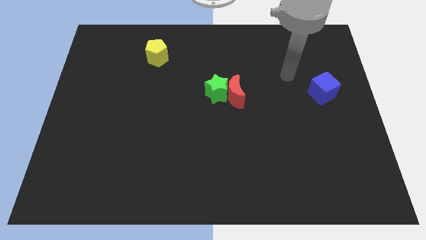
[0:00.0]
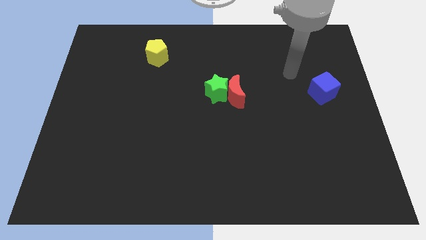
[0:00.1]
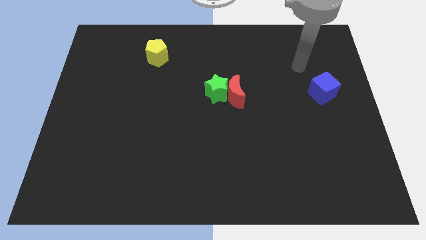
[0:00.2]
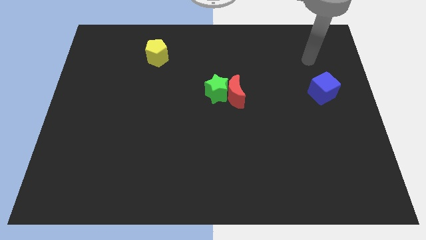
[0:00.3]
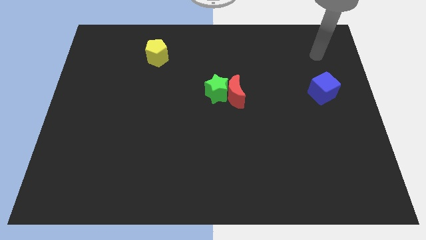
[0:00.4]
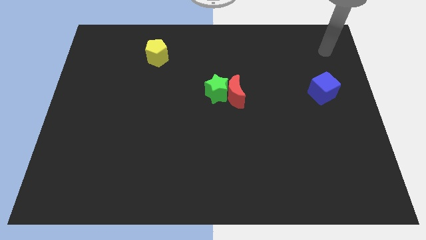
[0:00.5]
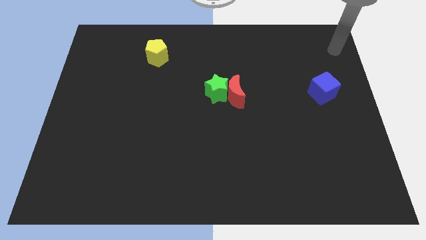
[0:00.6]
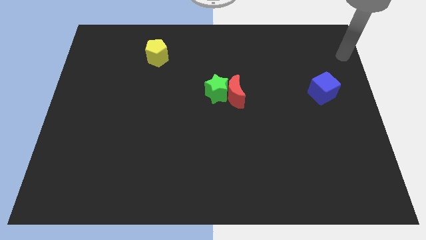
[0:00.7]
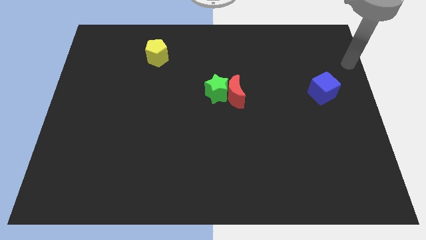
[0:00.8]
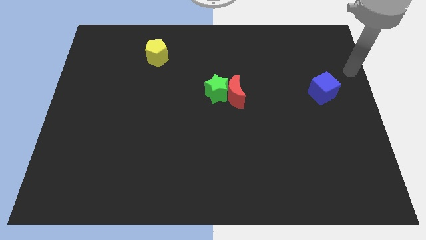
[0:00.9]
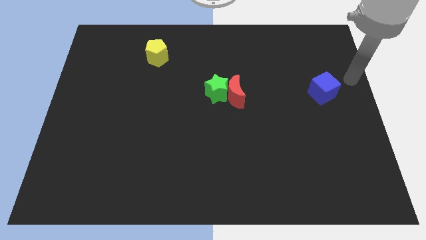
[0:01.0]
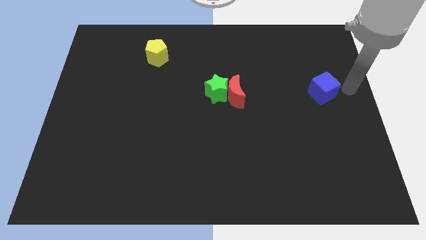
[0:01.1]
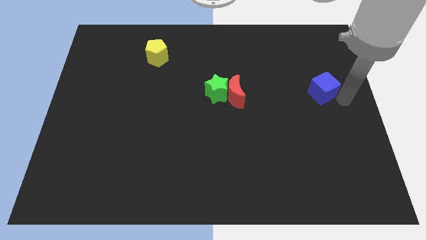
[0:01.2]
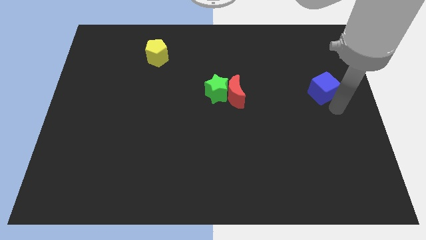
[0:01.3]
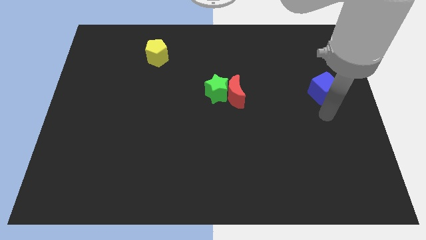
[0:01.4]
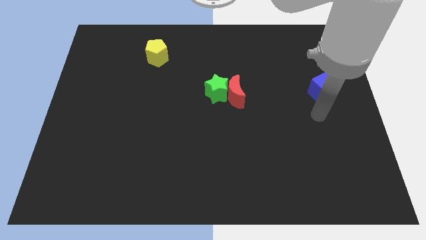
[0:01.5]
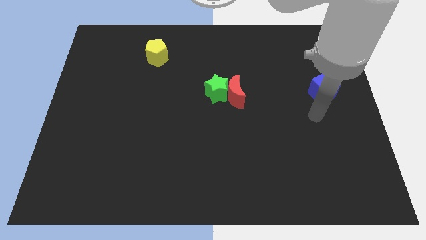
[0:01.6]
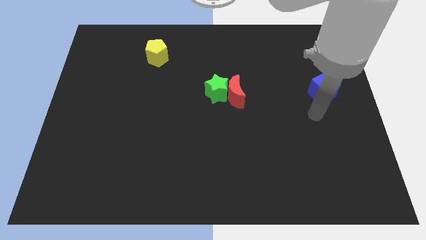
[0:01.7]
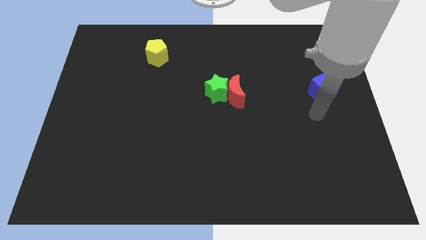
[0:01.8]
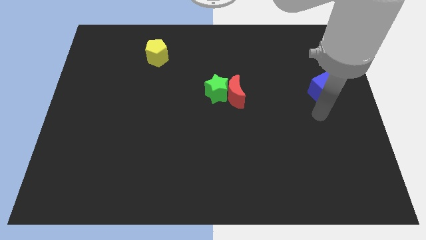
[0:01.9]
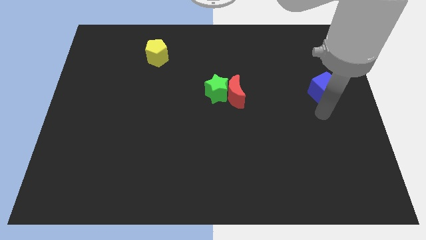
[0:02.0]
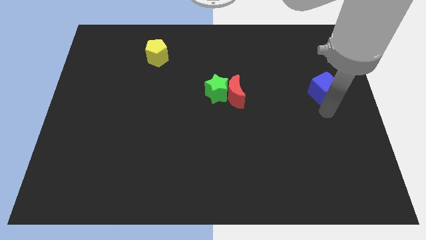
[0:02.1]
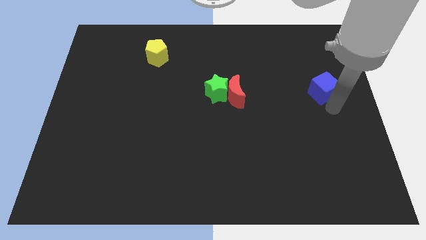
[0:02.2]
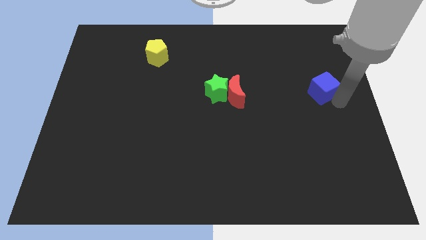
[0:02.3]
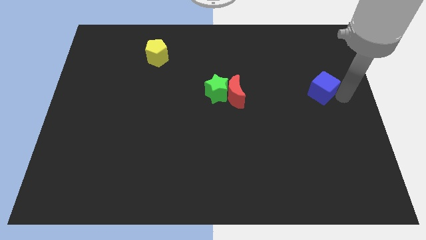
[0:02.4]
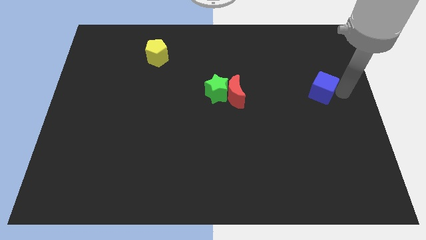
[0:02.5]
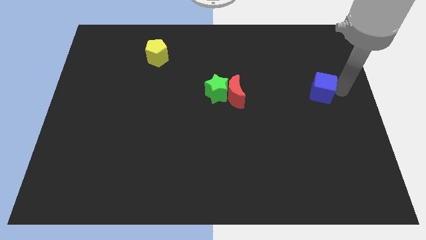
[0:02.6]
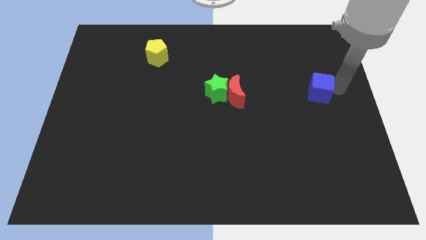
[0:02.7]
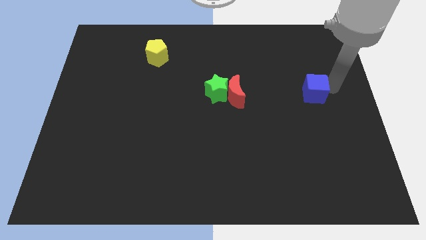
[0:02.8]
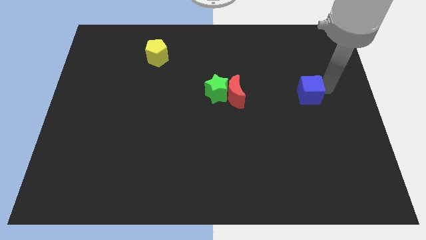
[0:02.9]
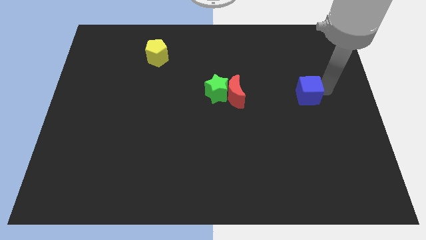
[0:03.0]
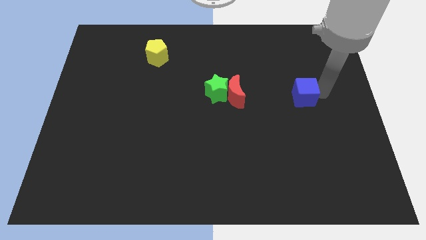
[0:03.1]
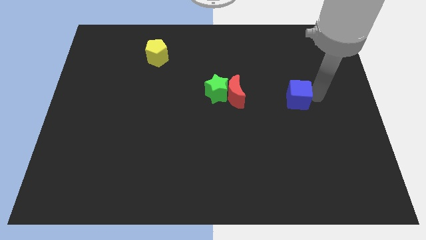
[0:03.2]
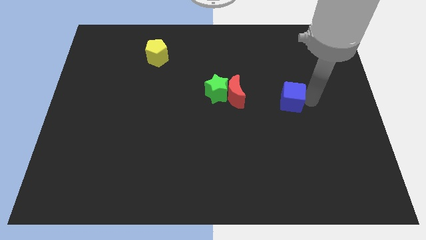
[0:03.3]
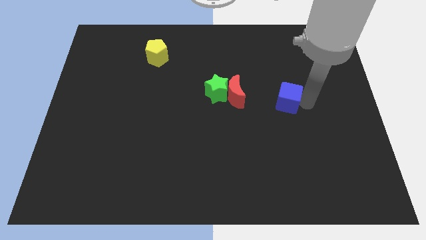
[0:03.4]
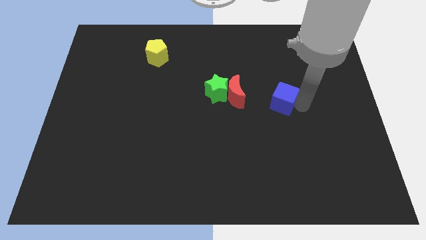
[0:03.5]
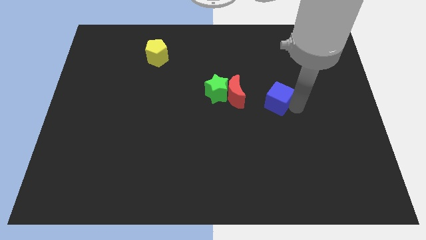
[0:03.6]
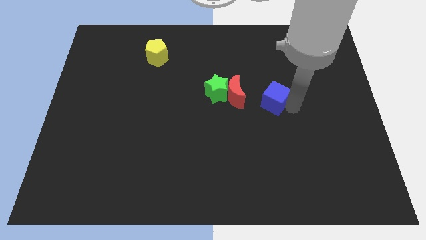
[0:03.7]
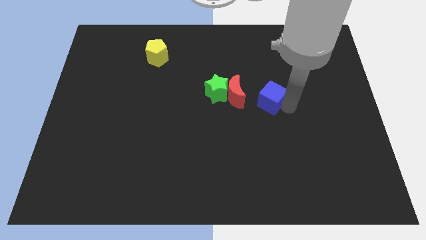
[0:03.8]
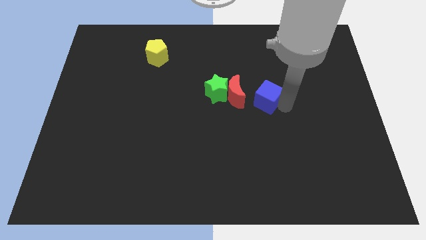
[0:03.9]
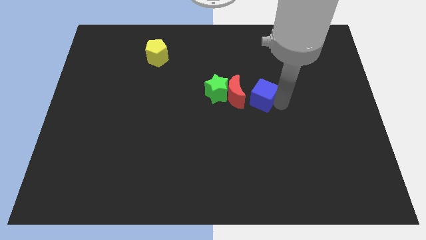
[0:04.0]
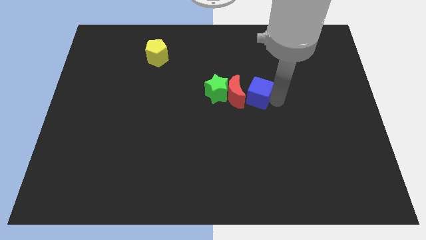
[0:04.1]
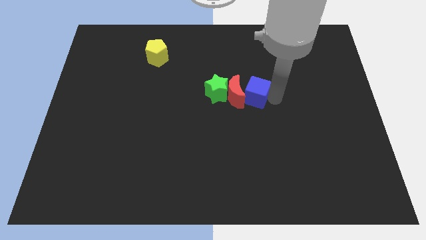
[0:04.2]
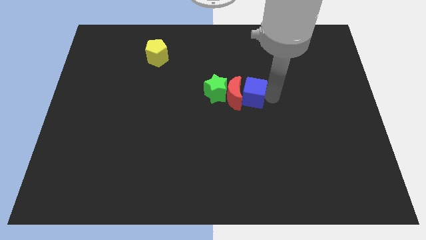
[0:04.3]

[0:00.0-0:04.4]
push the cube towards the moon

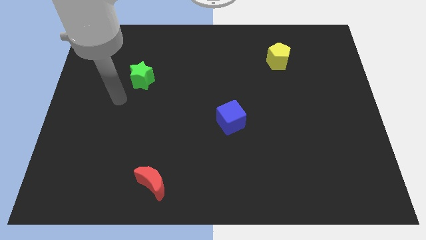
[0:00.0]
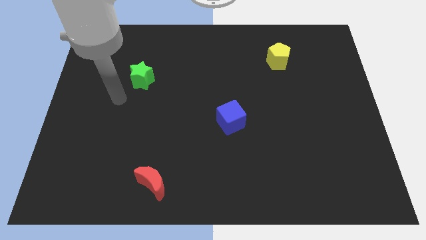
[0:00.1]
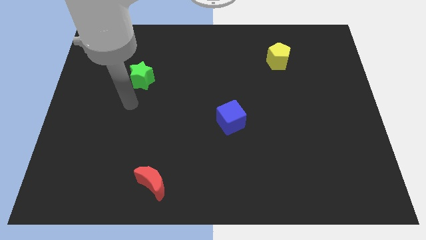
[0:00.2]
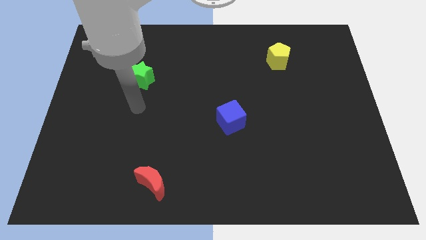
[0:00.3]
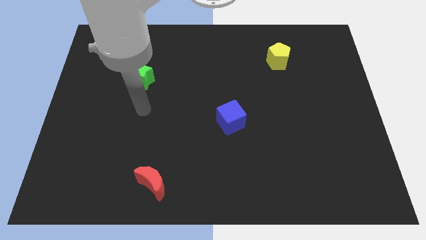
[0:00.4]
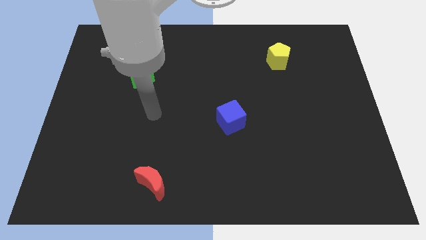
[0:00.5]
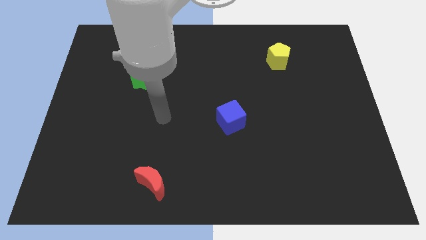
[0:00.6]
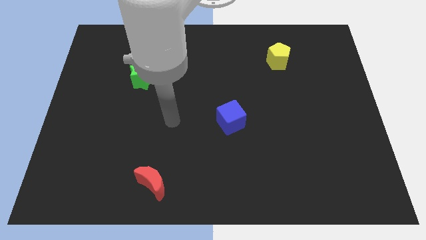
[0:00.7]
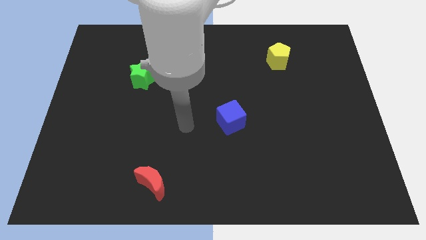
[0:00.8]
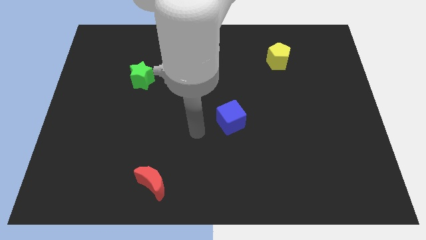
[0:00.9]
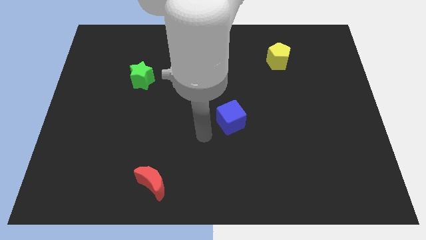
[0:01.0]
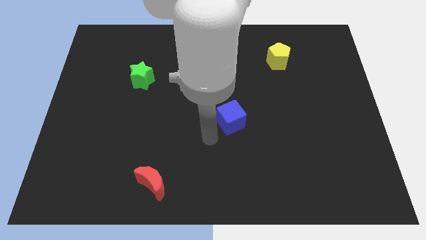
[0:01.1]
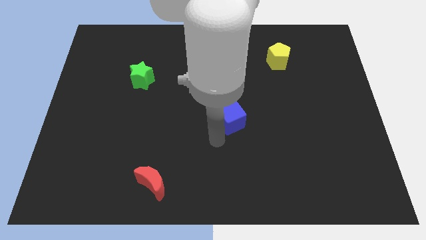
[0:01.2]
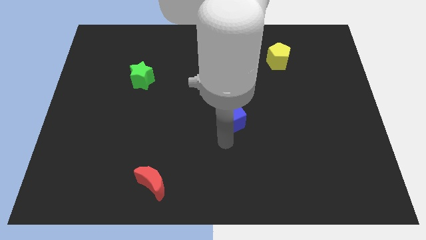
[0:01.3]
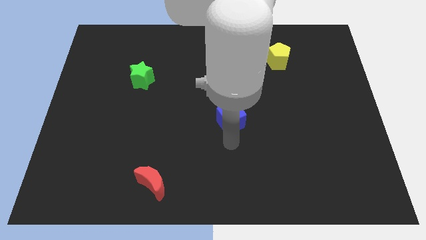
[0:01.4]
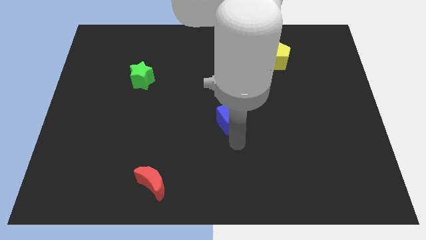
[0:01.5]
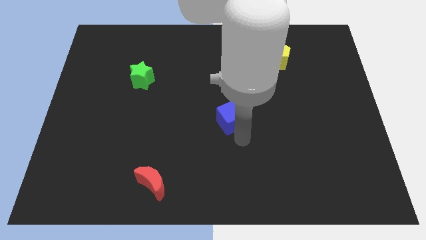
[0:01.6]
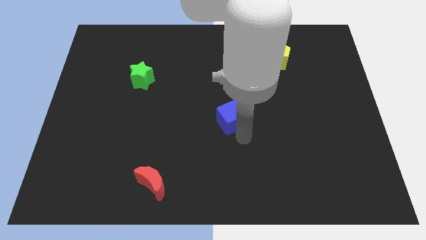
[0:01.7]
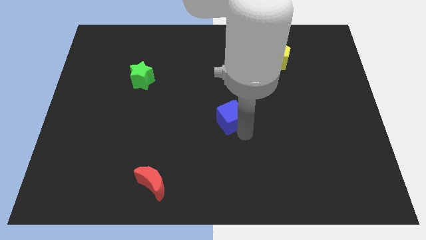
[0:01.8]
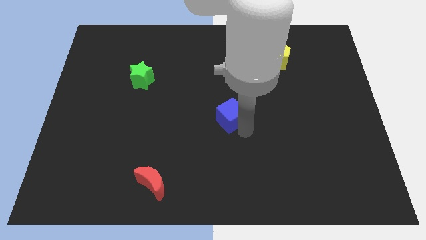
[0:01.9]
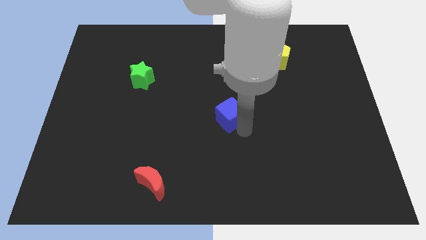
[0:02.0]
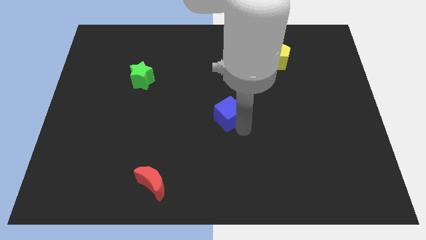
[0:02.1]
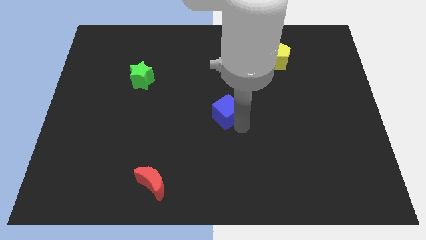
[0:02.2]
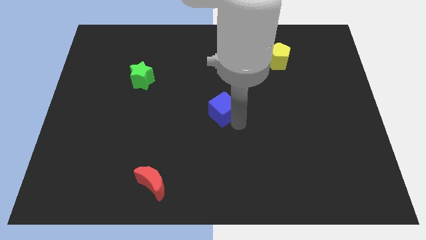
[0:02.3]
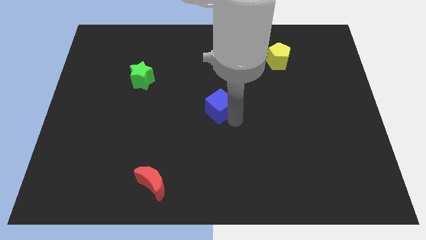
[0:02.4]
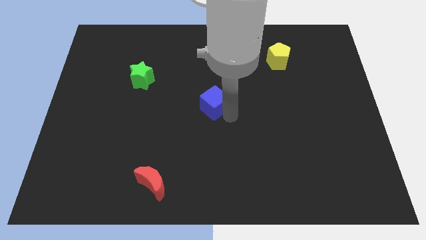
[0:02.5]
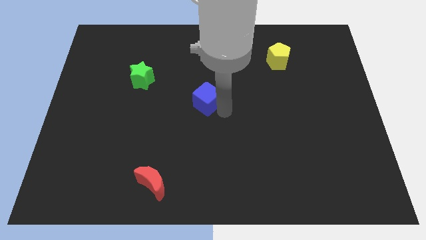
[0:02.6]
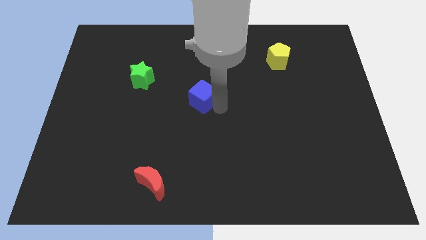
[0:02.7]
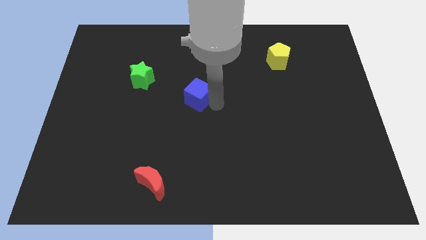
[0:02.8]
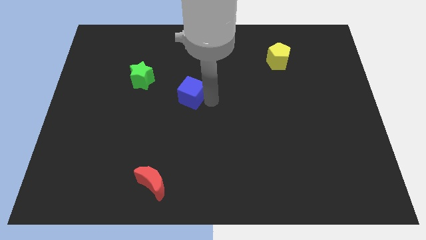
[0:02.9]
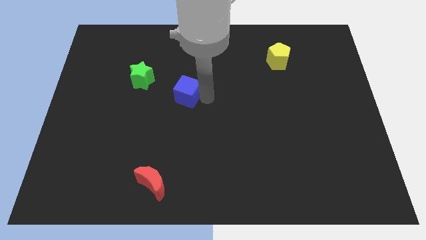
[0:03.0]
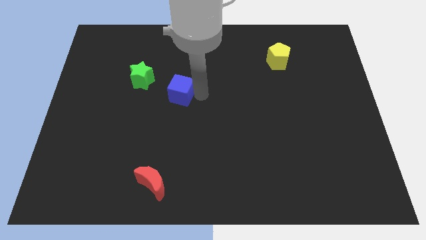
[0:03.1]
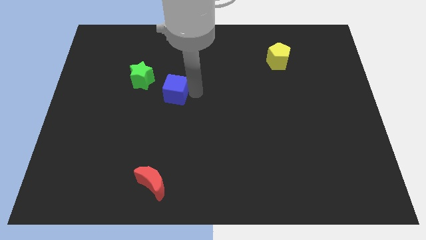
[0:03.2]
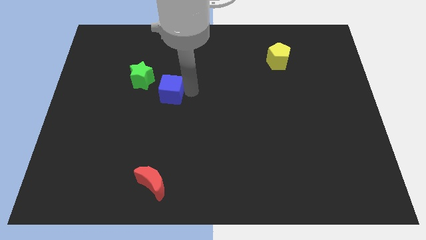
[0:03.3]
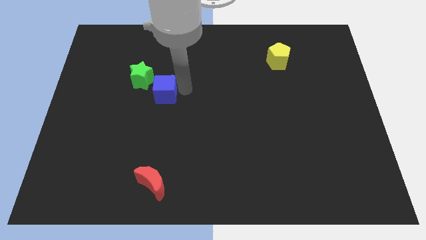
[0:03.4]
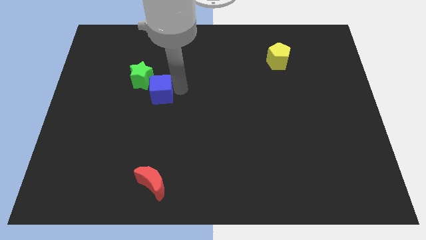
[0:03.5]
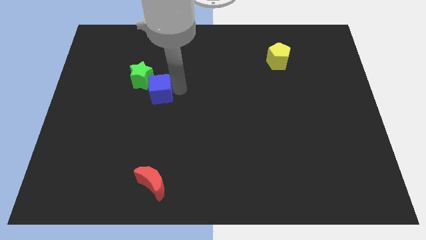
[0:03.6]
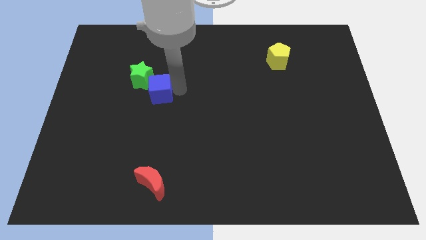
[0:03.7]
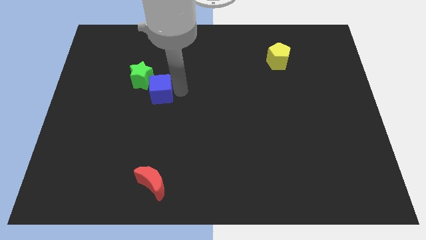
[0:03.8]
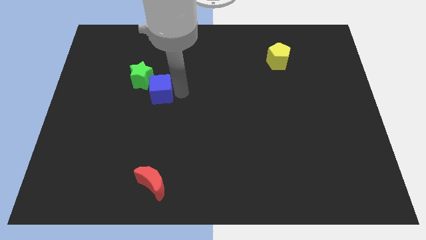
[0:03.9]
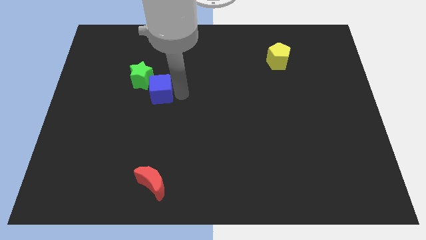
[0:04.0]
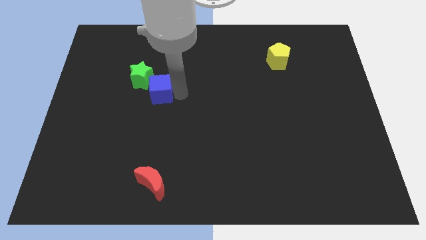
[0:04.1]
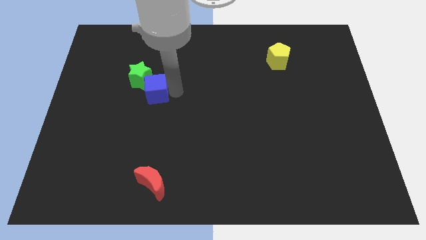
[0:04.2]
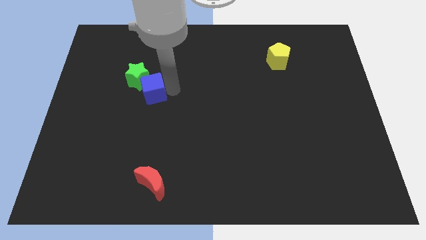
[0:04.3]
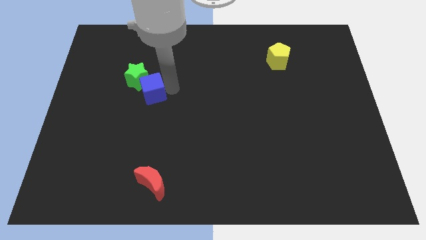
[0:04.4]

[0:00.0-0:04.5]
push the blue cube to the green star
